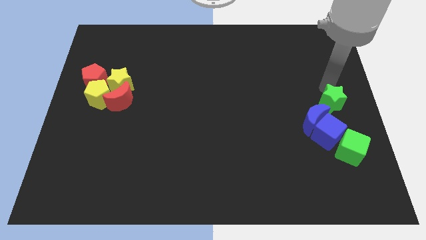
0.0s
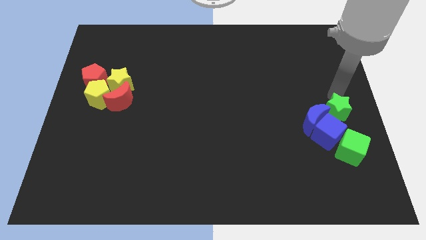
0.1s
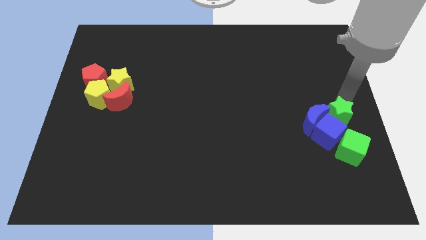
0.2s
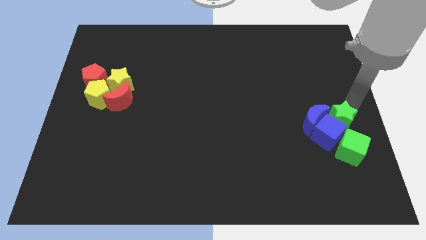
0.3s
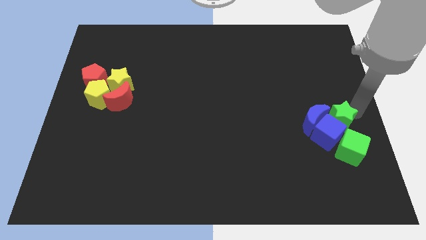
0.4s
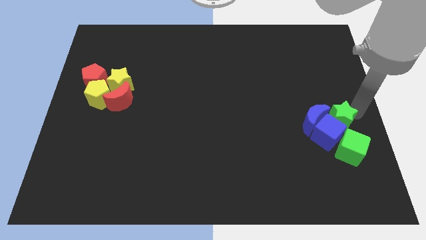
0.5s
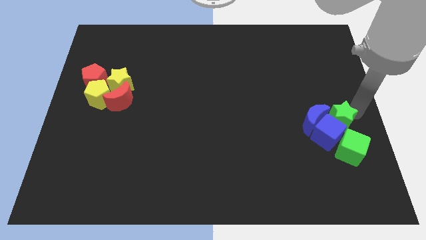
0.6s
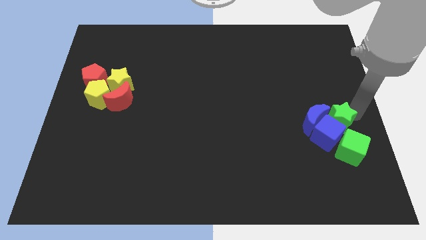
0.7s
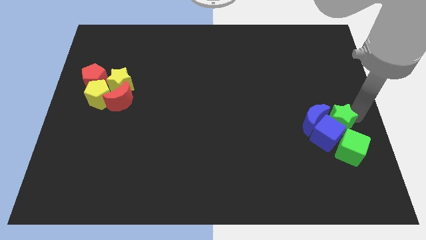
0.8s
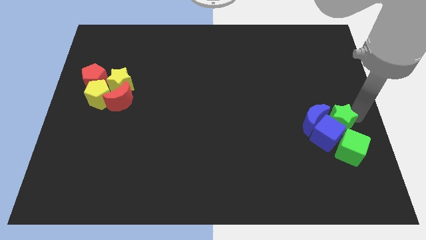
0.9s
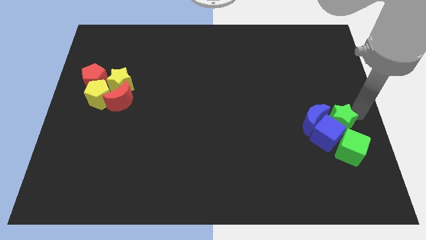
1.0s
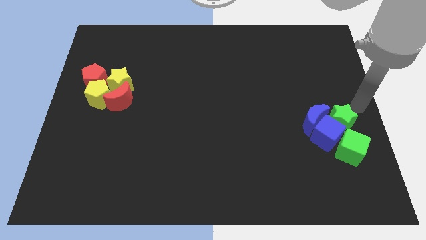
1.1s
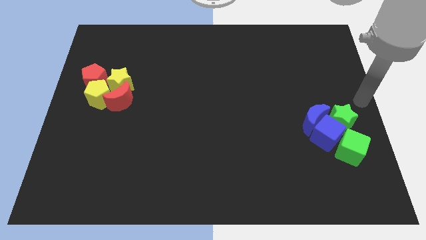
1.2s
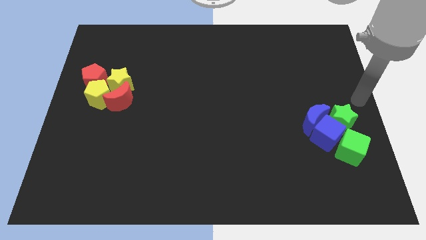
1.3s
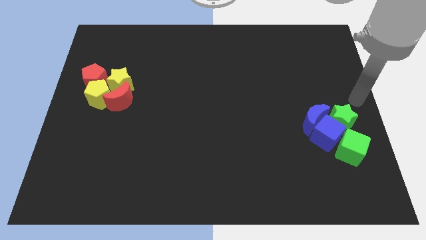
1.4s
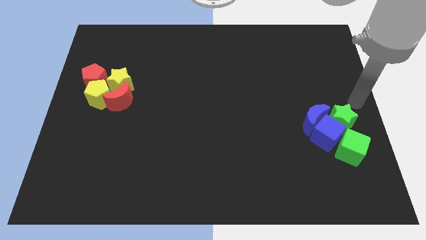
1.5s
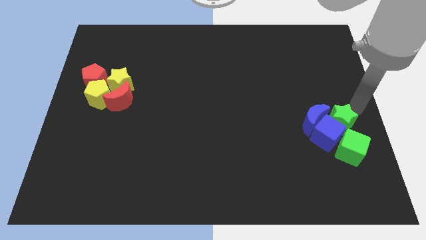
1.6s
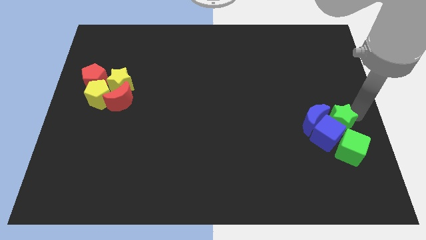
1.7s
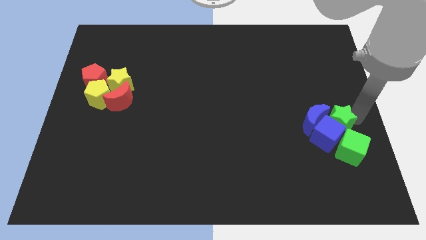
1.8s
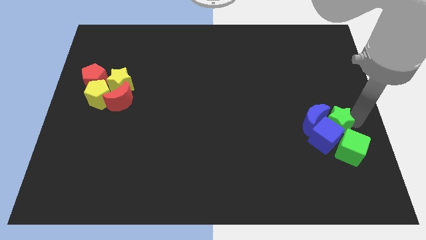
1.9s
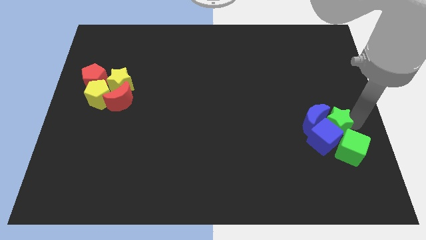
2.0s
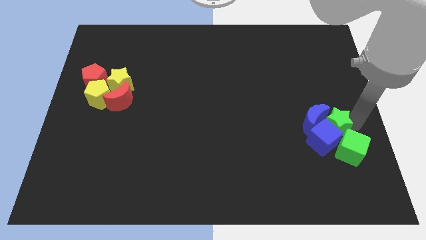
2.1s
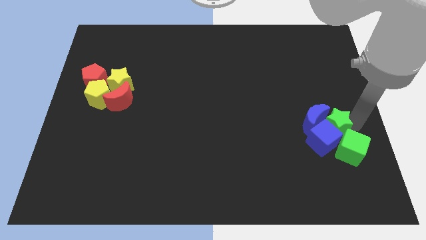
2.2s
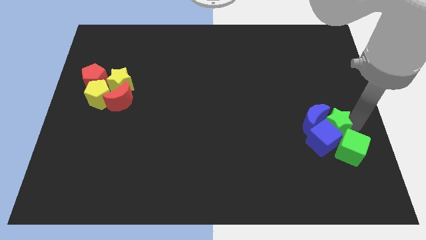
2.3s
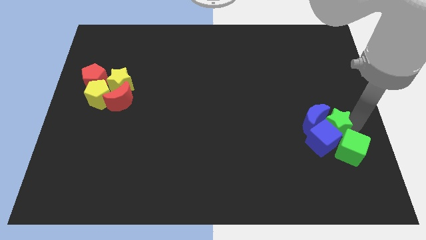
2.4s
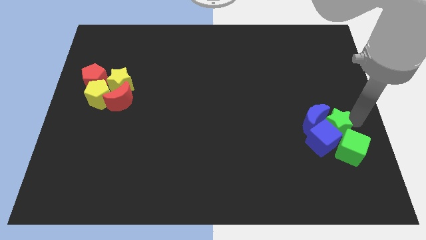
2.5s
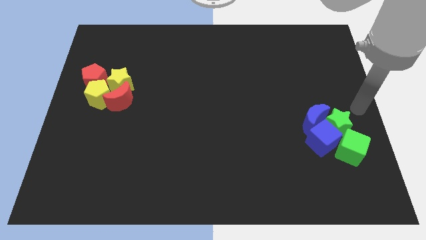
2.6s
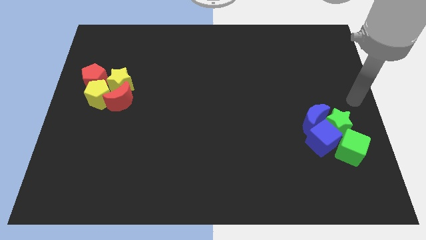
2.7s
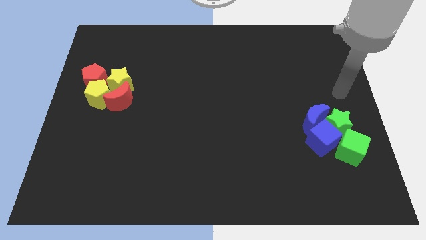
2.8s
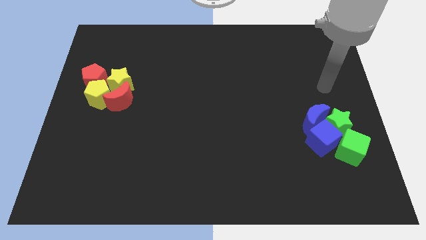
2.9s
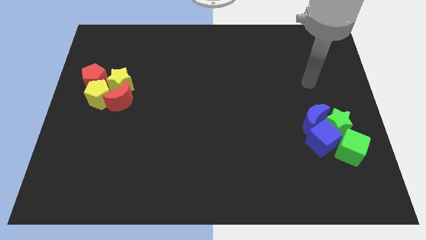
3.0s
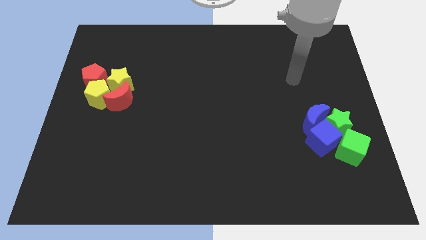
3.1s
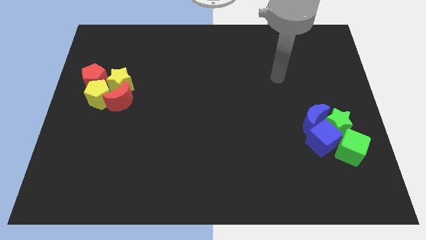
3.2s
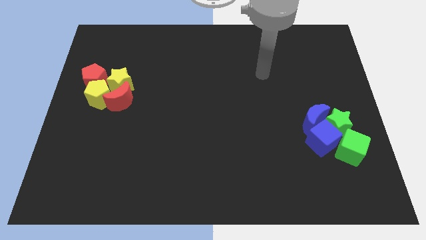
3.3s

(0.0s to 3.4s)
slightly push the green star into blue cube

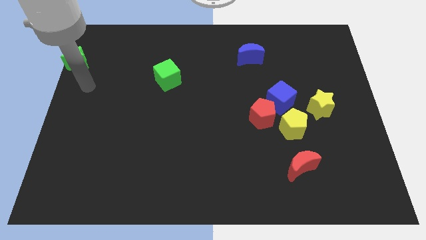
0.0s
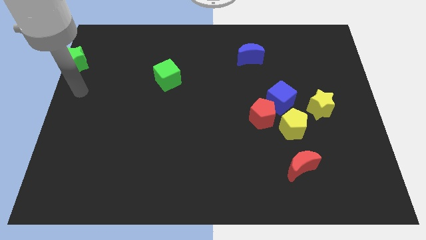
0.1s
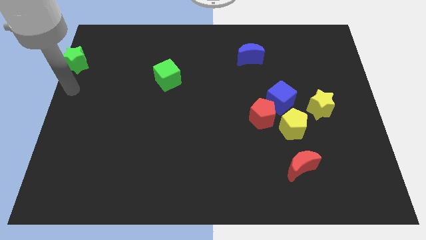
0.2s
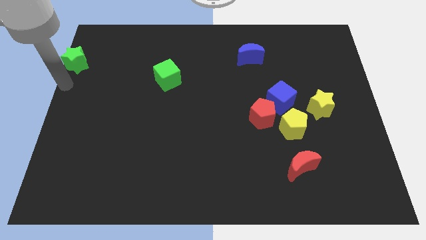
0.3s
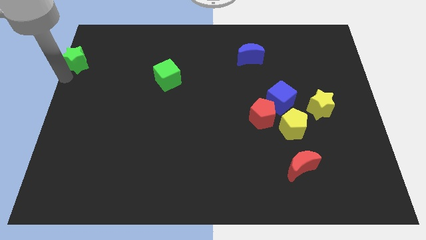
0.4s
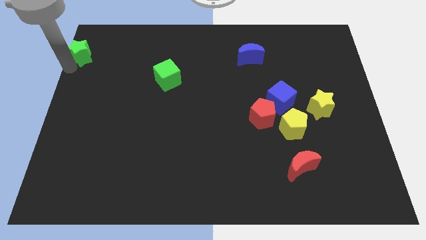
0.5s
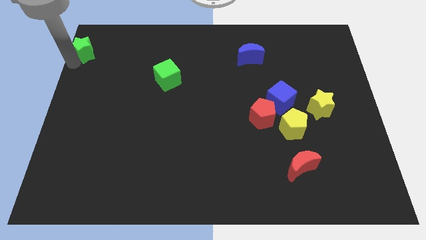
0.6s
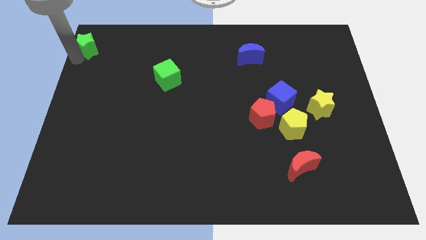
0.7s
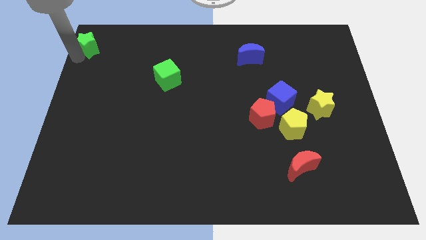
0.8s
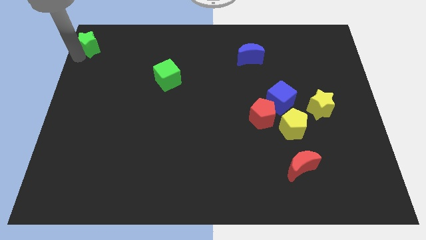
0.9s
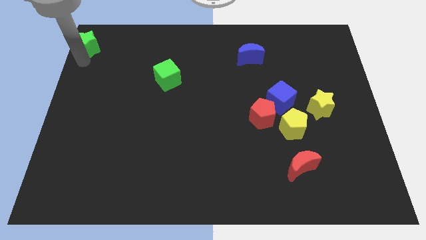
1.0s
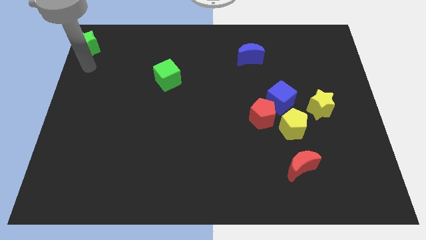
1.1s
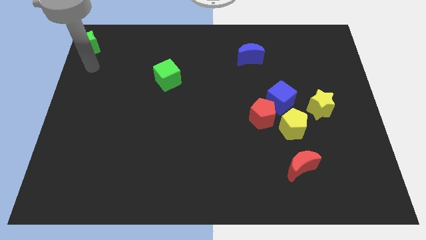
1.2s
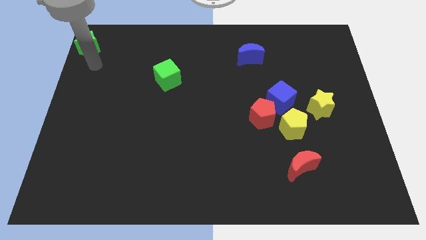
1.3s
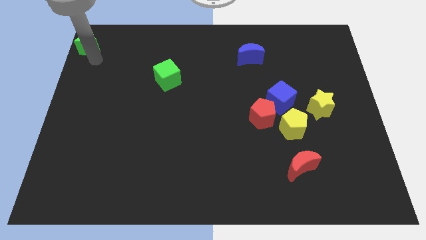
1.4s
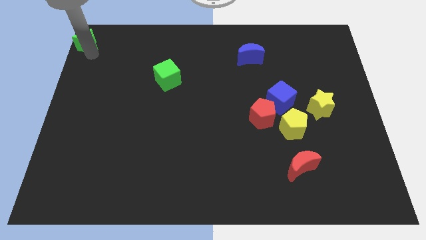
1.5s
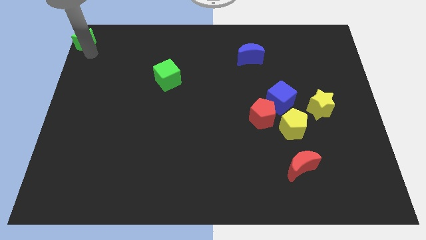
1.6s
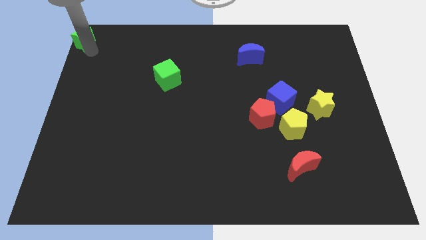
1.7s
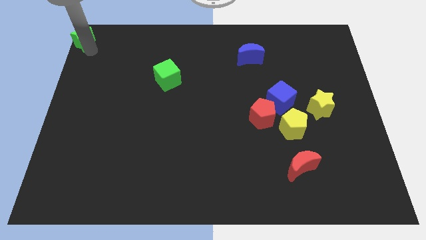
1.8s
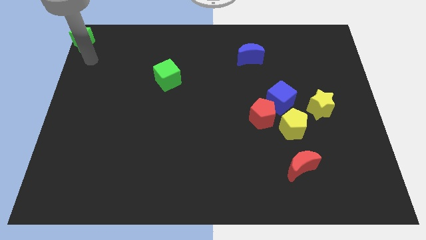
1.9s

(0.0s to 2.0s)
push the green star to the top left corner of the board

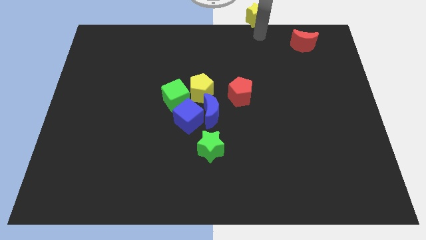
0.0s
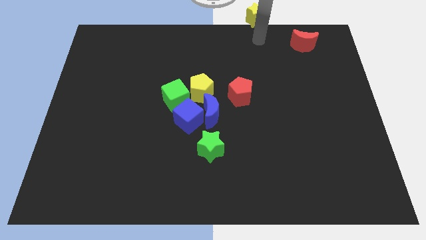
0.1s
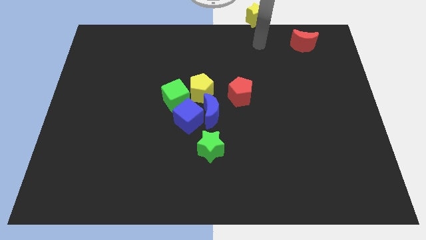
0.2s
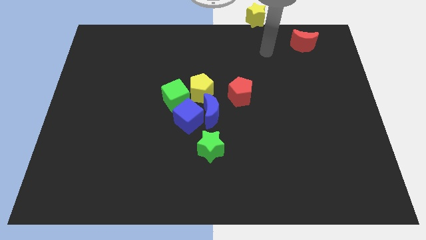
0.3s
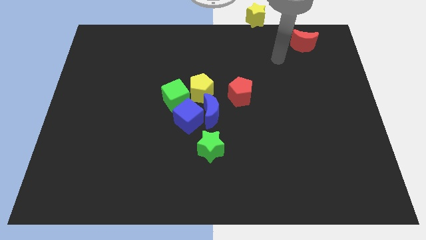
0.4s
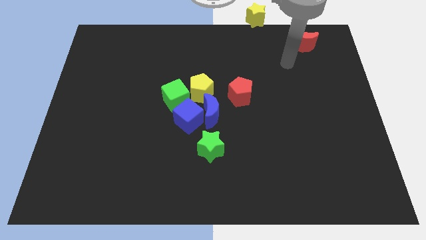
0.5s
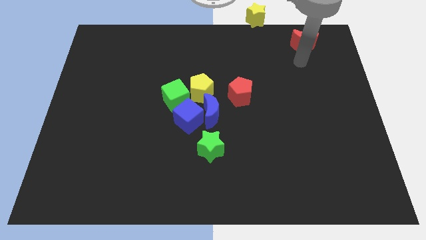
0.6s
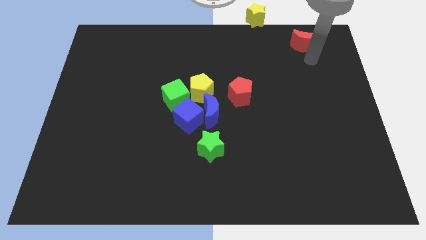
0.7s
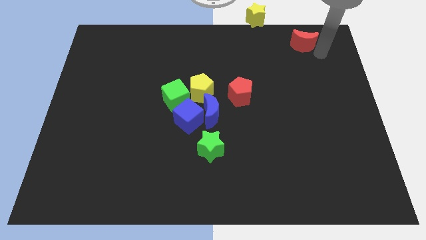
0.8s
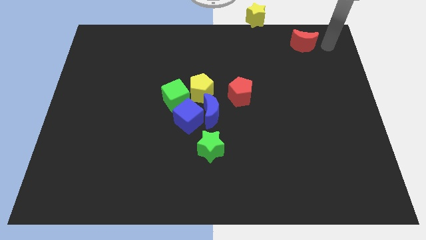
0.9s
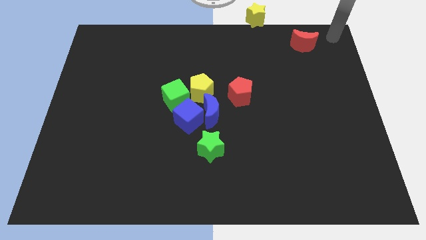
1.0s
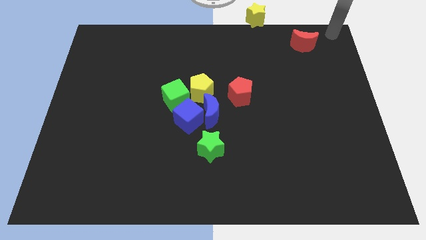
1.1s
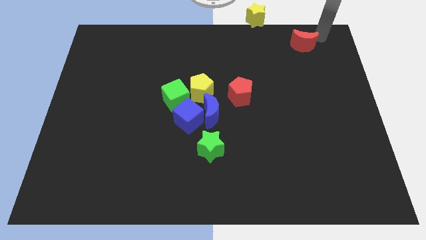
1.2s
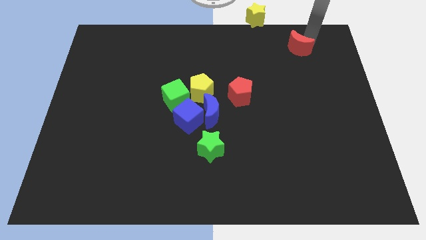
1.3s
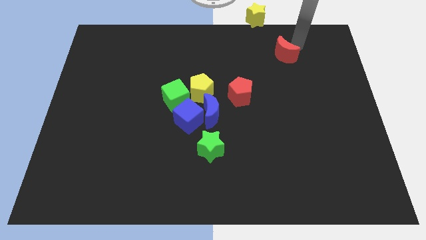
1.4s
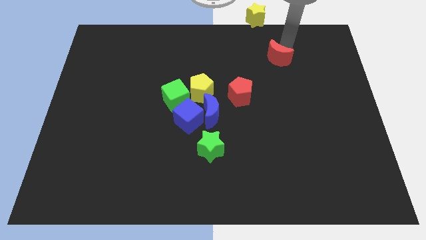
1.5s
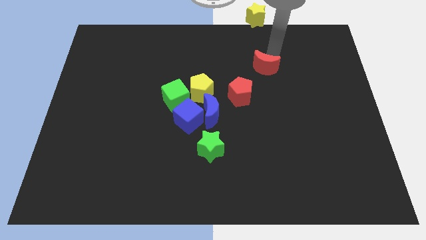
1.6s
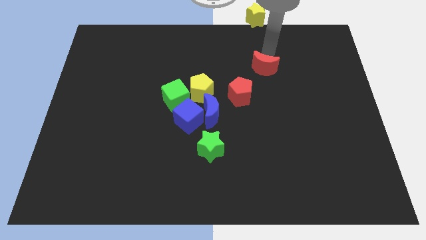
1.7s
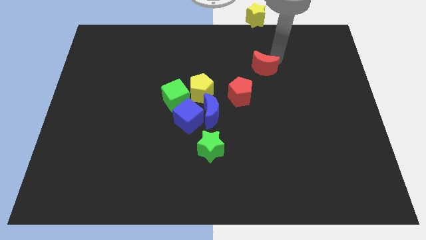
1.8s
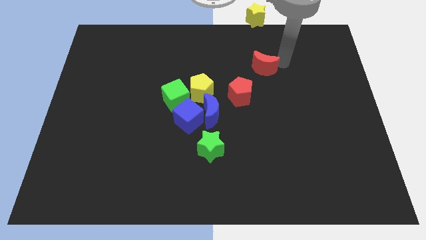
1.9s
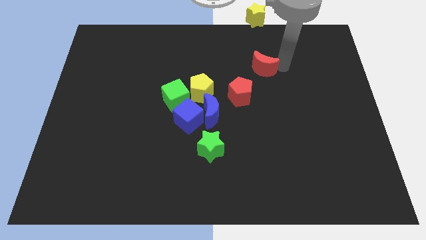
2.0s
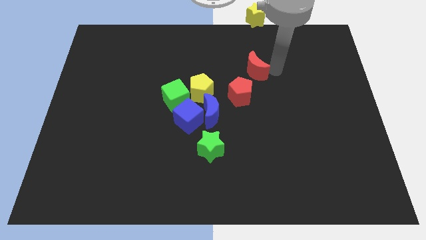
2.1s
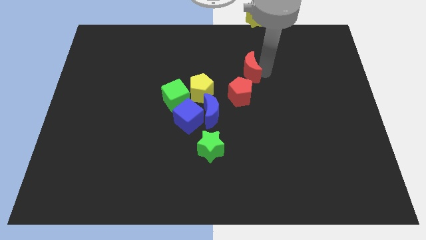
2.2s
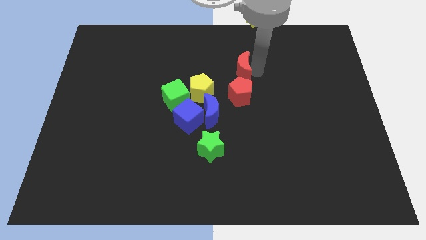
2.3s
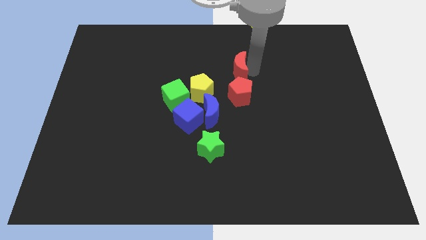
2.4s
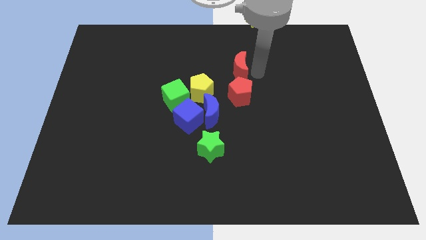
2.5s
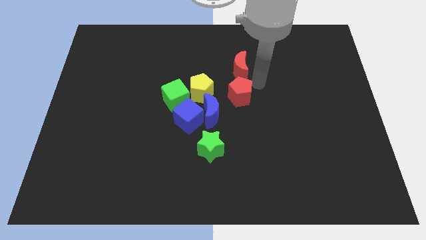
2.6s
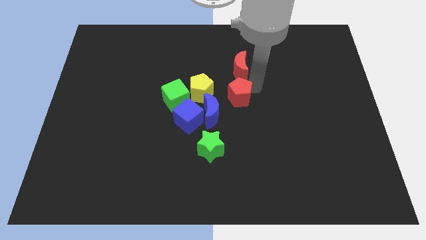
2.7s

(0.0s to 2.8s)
move the red crescent to the top of the red pentagon

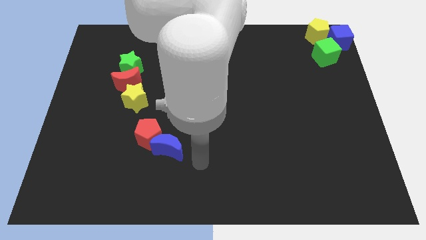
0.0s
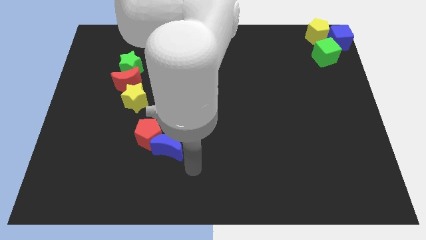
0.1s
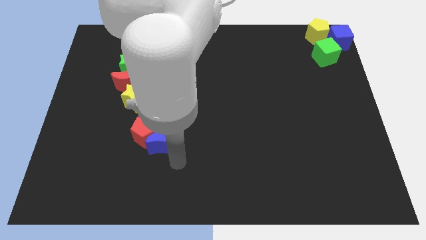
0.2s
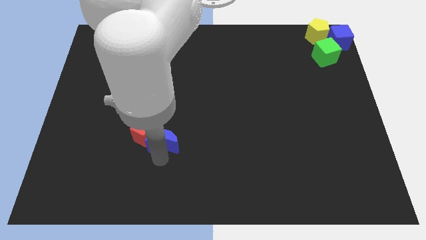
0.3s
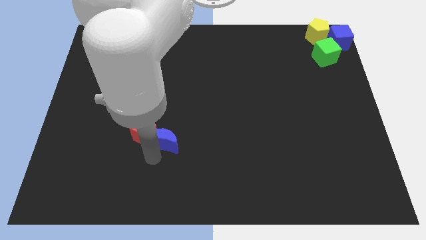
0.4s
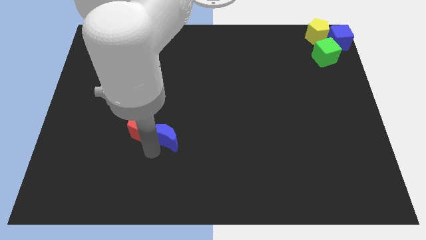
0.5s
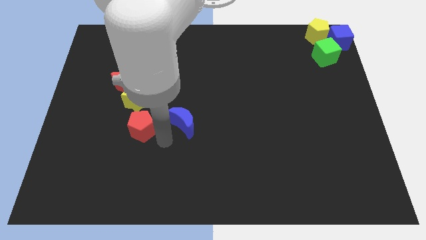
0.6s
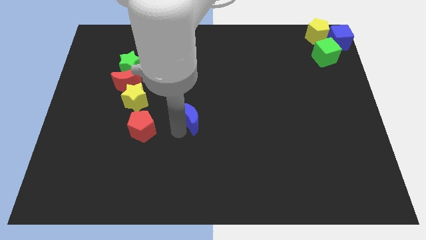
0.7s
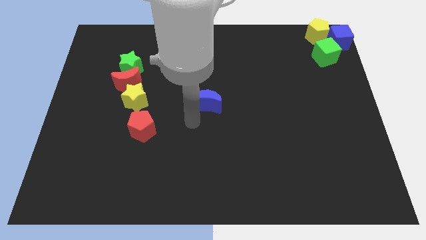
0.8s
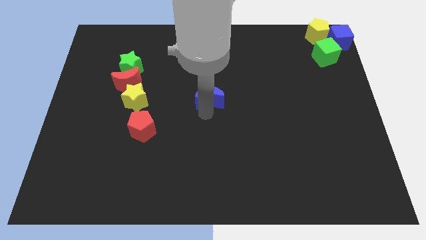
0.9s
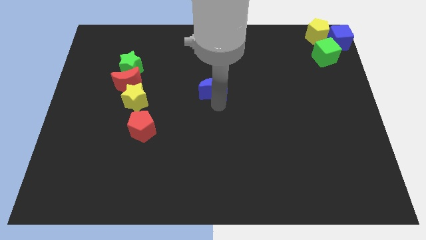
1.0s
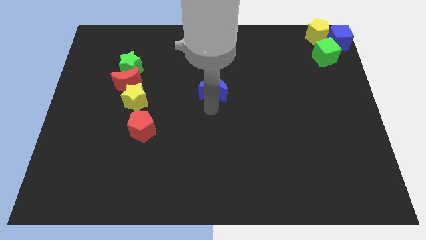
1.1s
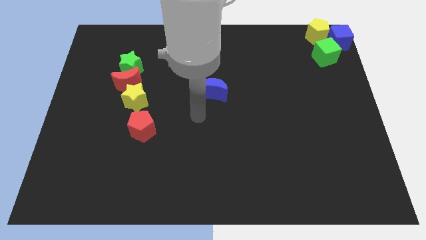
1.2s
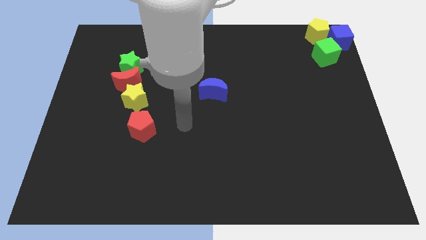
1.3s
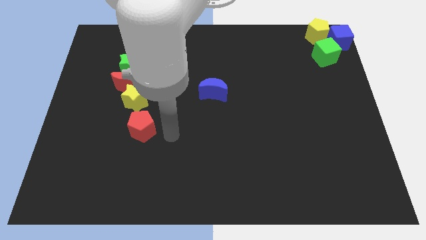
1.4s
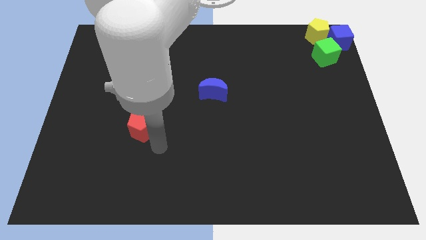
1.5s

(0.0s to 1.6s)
place blue moon at the center of the board
